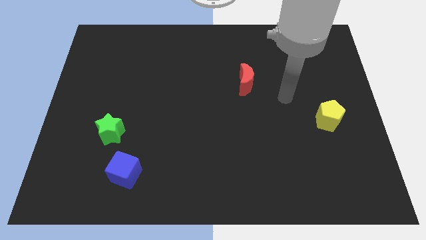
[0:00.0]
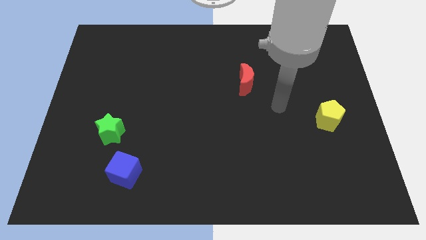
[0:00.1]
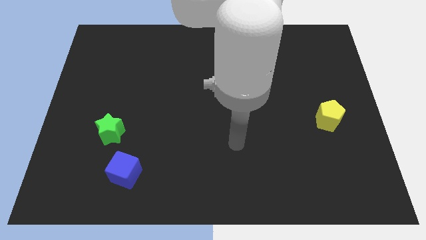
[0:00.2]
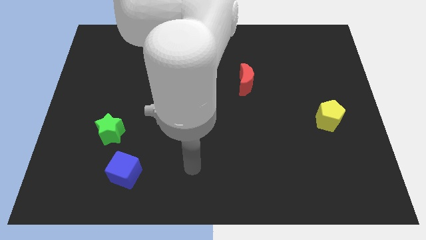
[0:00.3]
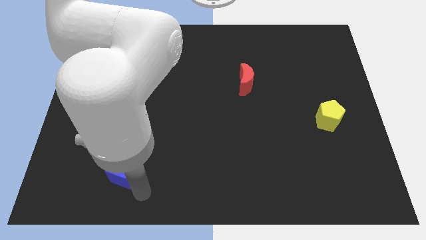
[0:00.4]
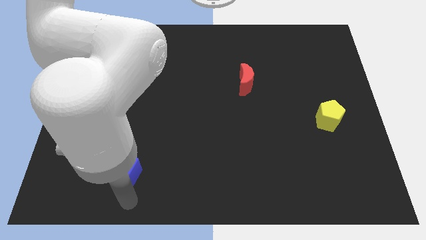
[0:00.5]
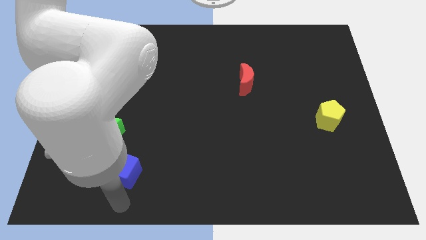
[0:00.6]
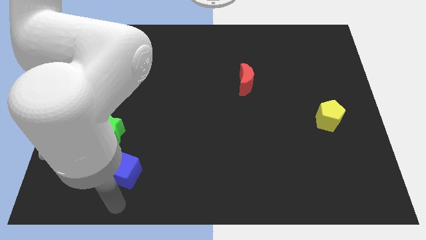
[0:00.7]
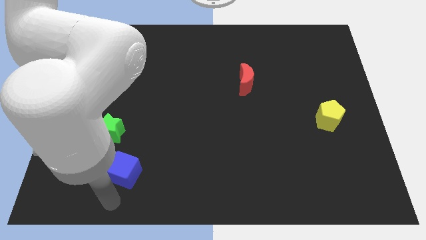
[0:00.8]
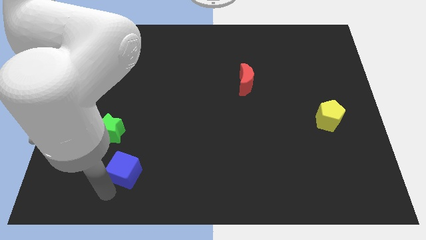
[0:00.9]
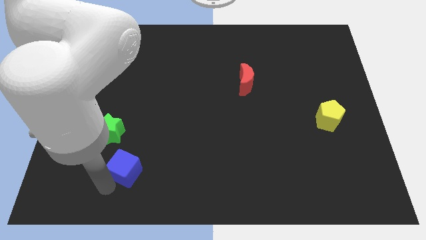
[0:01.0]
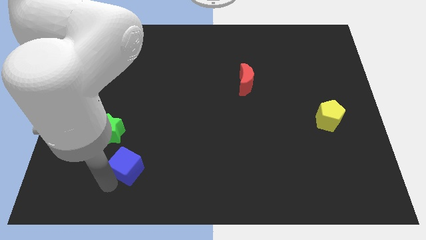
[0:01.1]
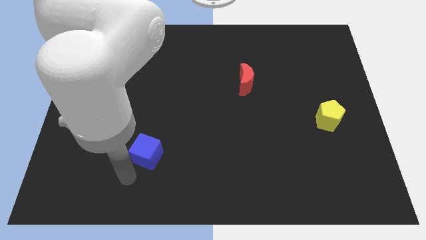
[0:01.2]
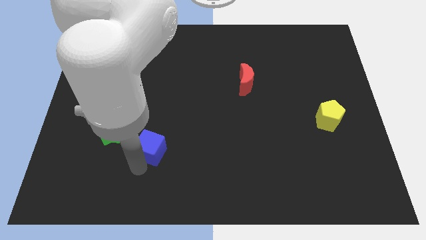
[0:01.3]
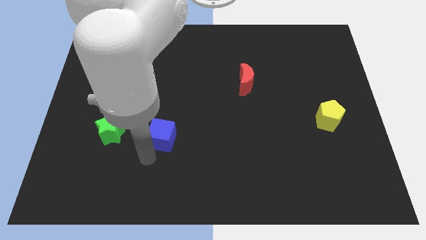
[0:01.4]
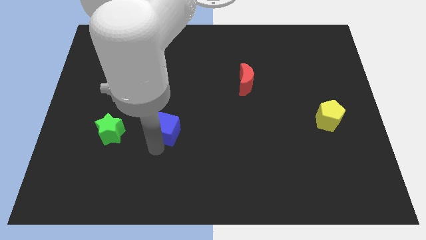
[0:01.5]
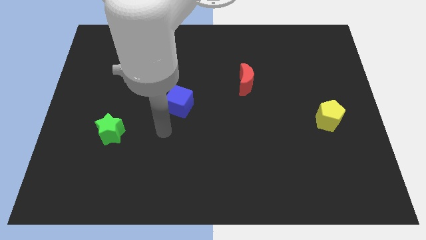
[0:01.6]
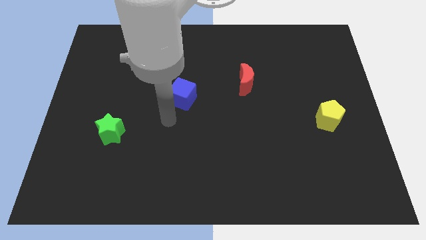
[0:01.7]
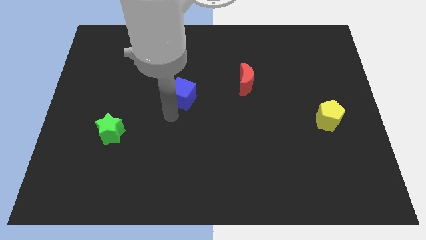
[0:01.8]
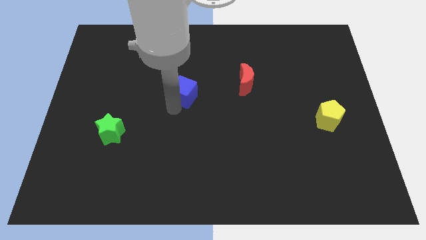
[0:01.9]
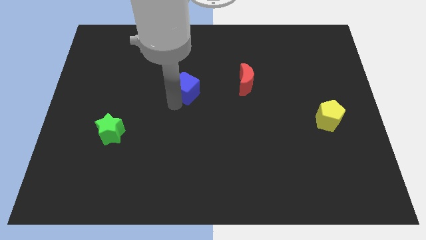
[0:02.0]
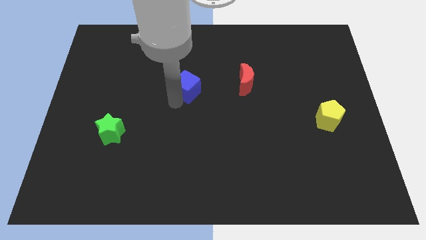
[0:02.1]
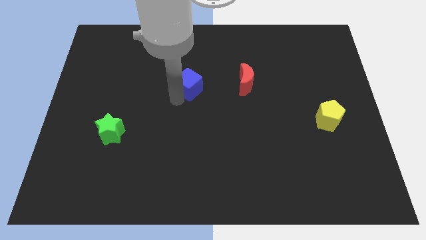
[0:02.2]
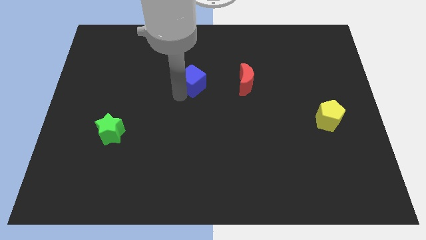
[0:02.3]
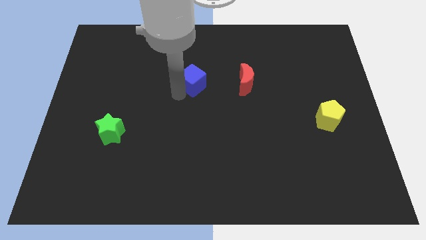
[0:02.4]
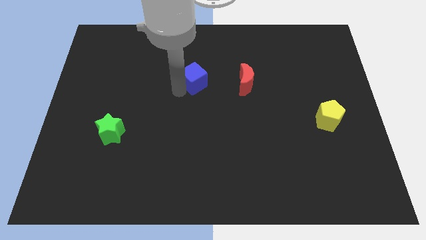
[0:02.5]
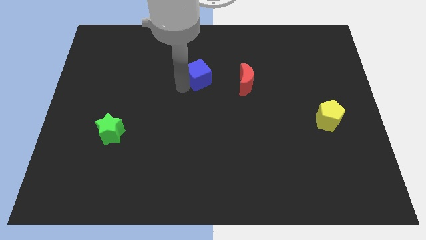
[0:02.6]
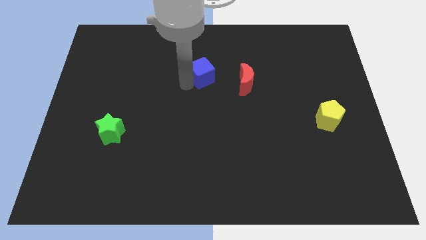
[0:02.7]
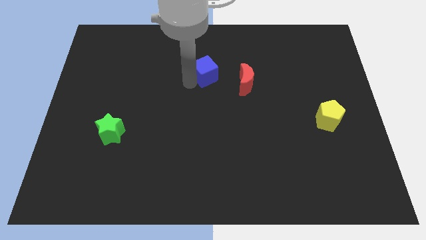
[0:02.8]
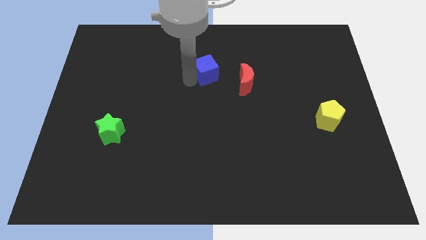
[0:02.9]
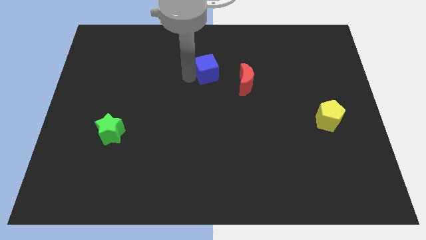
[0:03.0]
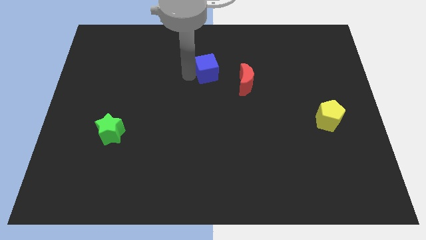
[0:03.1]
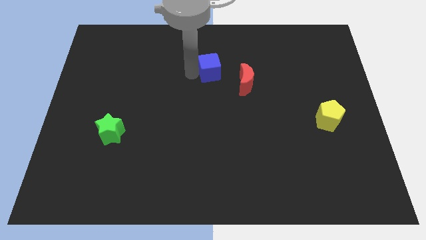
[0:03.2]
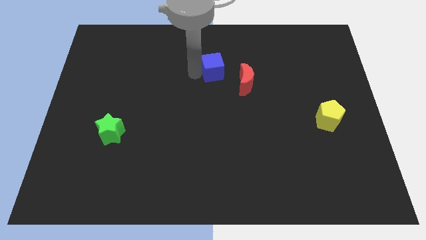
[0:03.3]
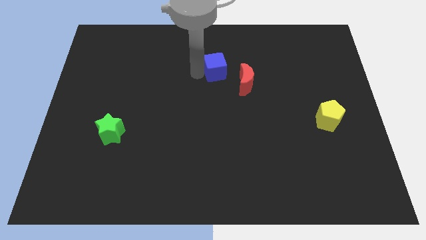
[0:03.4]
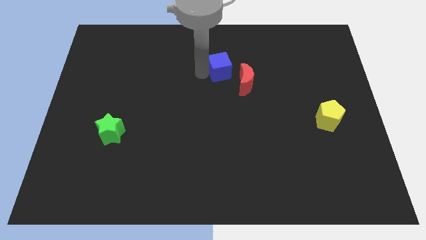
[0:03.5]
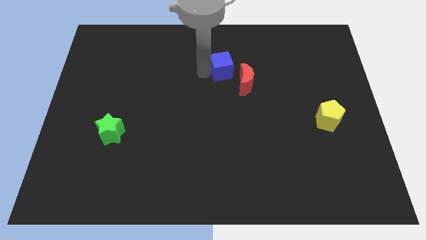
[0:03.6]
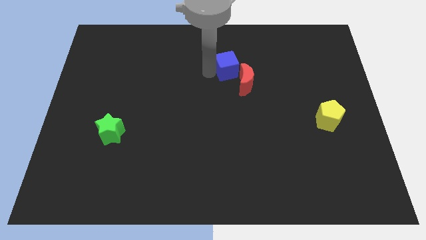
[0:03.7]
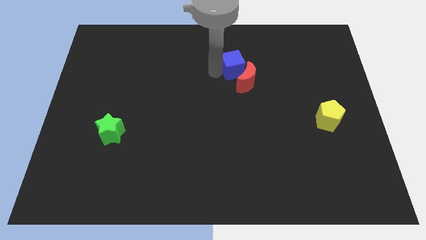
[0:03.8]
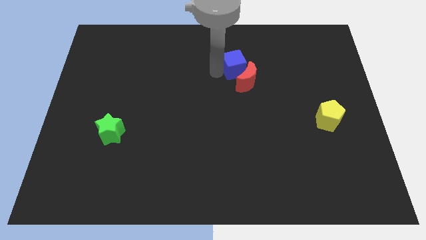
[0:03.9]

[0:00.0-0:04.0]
put the cube next to the moon

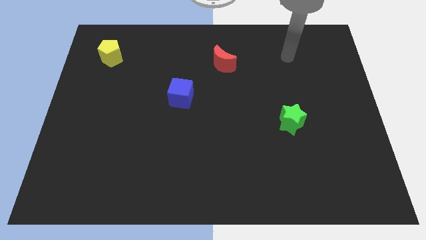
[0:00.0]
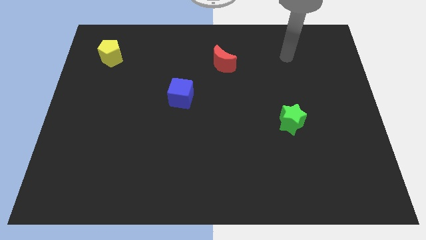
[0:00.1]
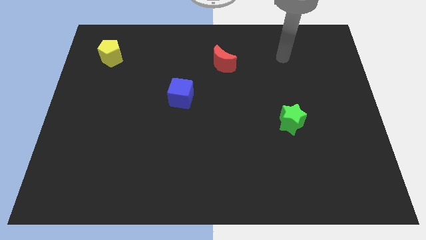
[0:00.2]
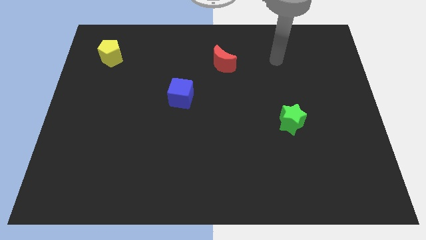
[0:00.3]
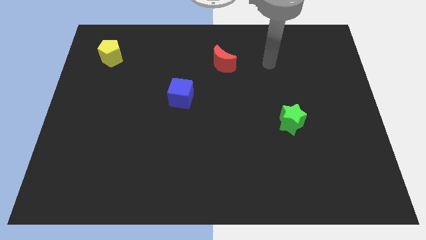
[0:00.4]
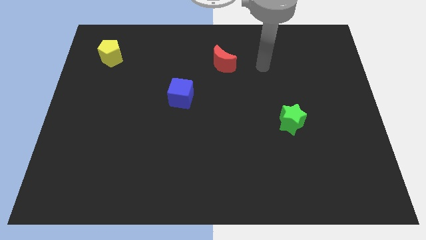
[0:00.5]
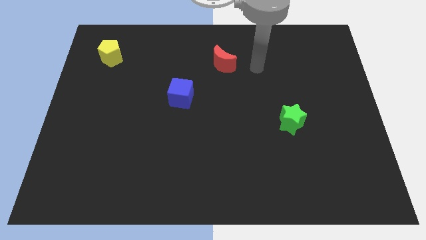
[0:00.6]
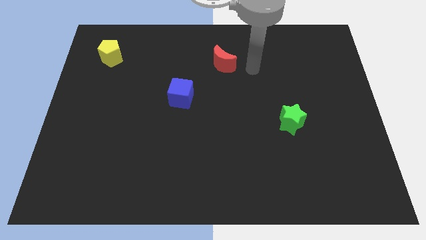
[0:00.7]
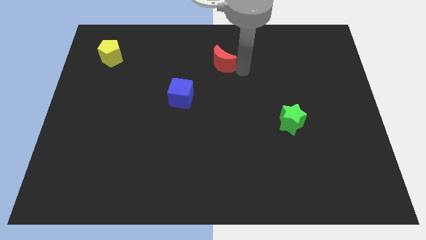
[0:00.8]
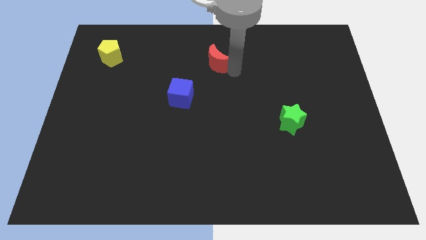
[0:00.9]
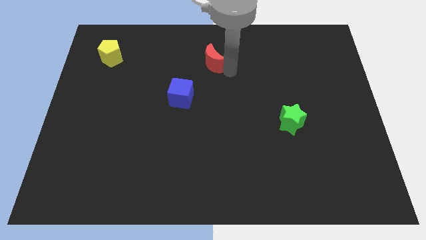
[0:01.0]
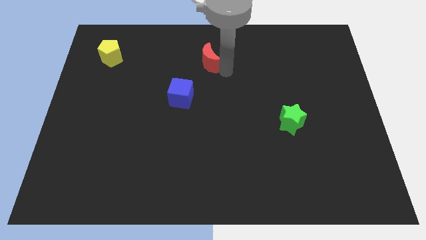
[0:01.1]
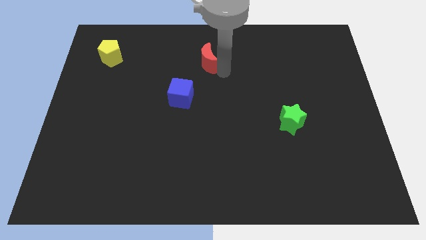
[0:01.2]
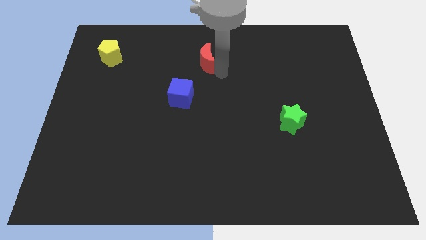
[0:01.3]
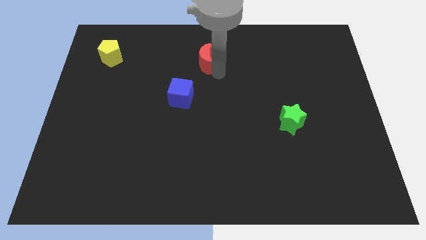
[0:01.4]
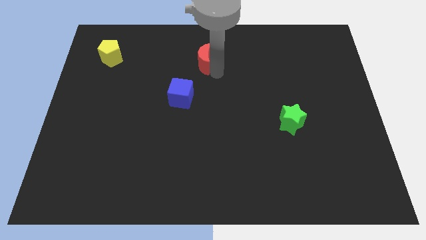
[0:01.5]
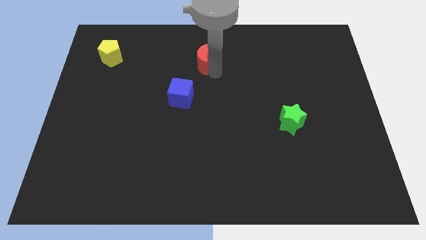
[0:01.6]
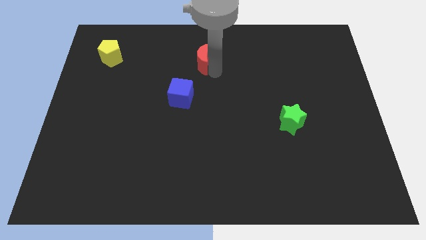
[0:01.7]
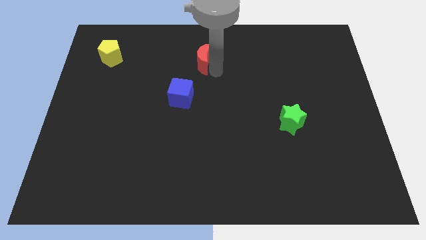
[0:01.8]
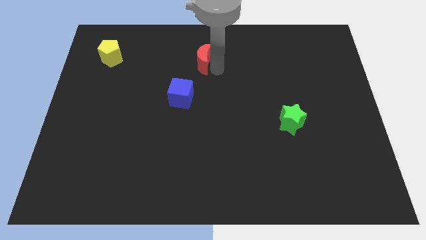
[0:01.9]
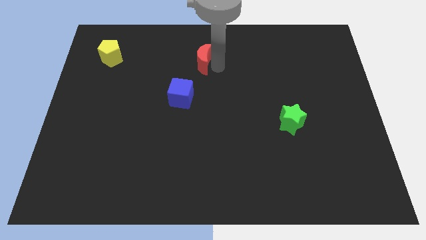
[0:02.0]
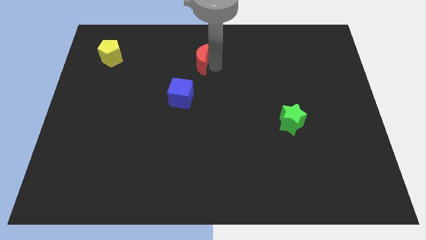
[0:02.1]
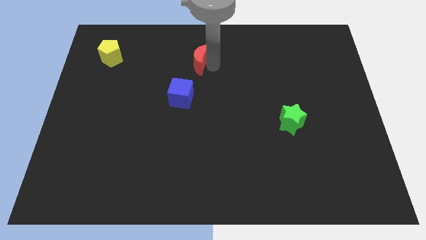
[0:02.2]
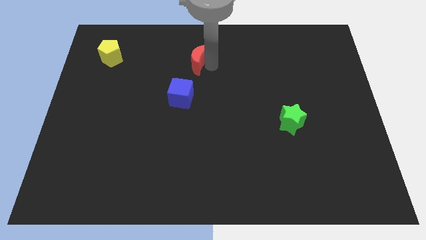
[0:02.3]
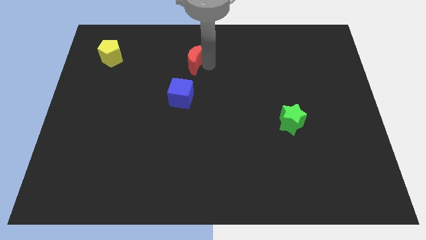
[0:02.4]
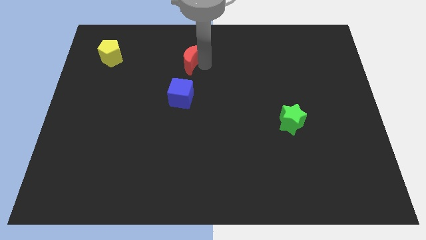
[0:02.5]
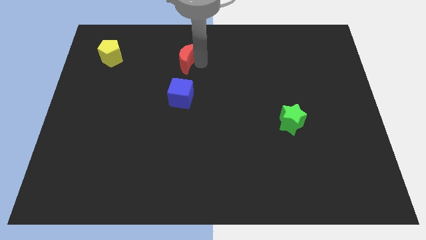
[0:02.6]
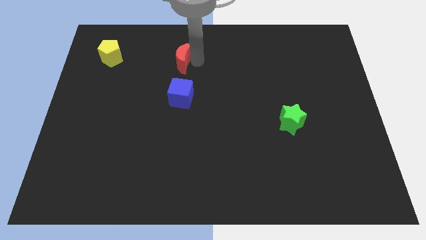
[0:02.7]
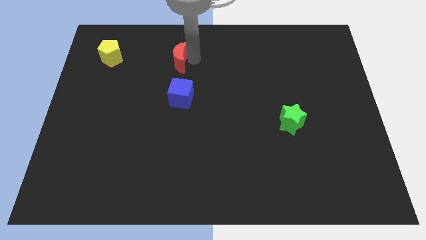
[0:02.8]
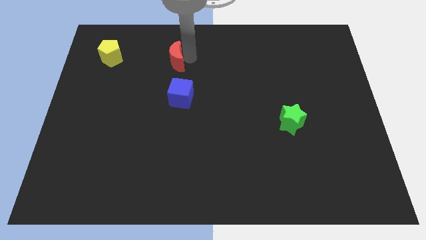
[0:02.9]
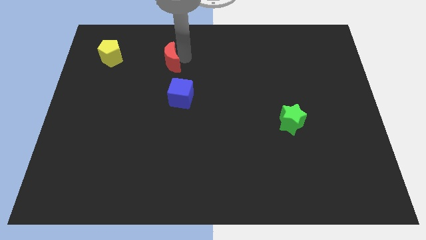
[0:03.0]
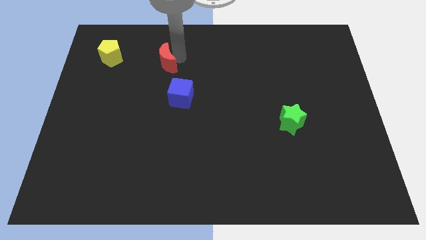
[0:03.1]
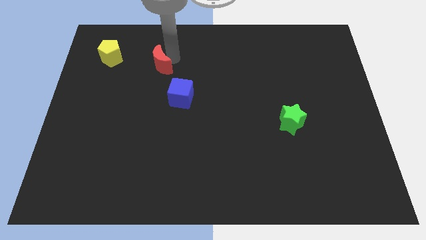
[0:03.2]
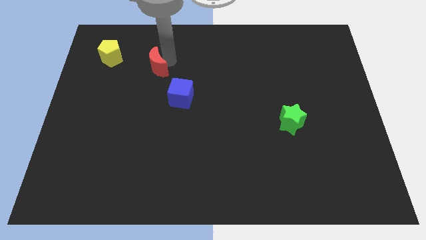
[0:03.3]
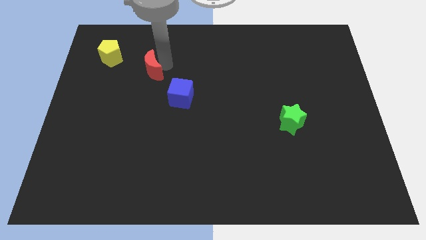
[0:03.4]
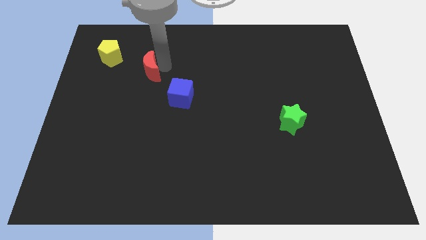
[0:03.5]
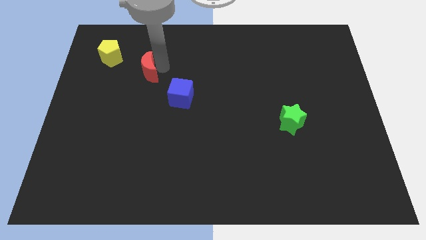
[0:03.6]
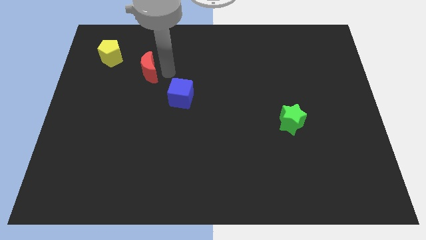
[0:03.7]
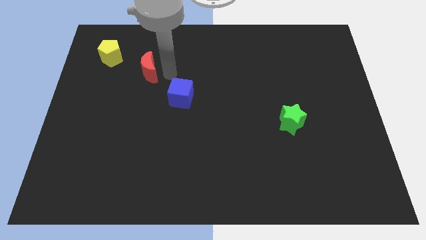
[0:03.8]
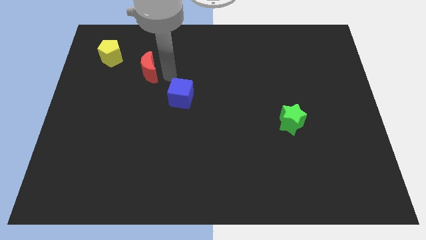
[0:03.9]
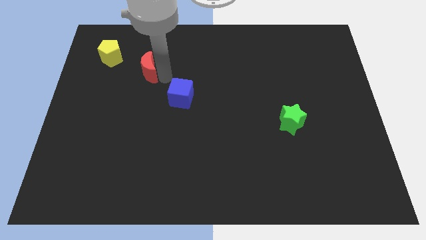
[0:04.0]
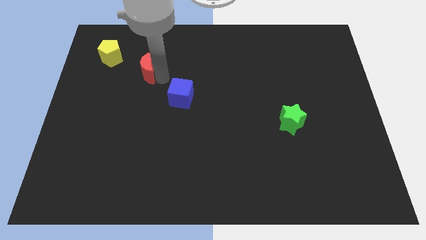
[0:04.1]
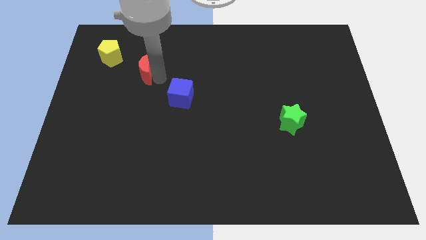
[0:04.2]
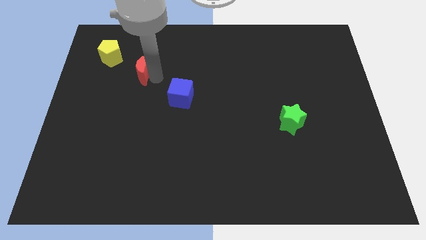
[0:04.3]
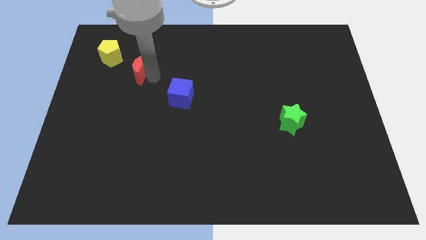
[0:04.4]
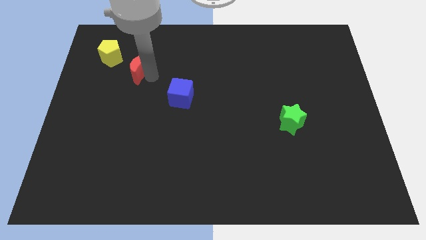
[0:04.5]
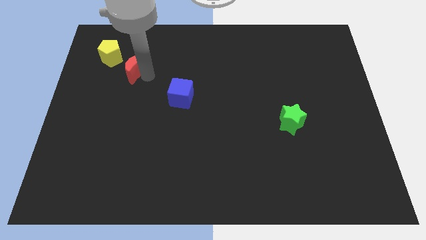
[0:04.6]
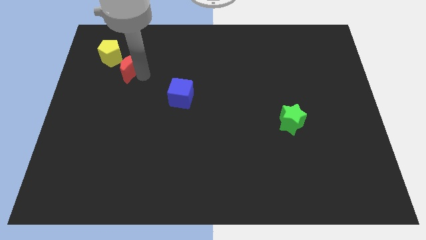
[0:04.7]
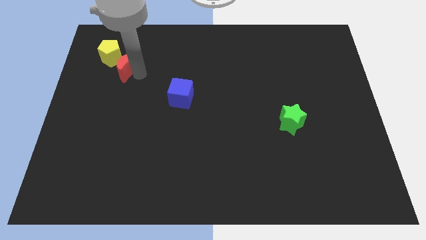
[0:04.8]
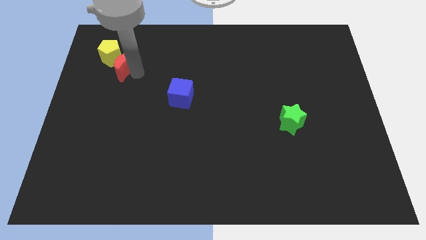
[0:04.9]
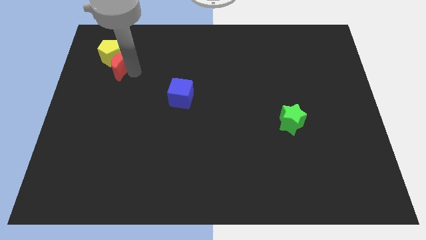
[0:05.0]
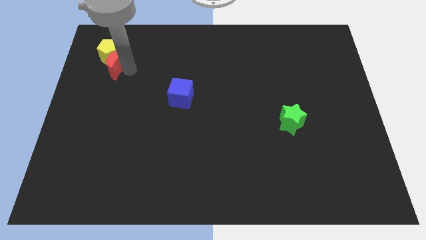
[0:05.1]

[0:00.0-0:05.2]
push the moon close to the yellow pentagon
